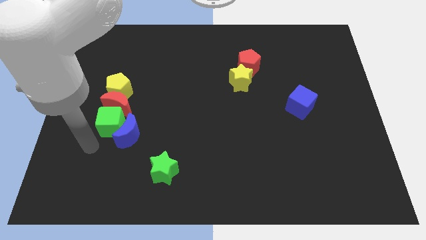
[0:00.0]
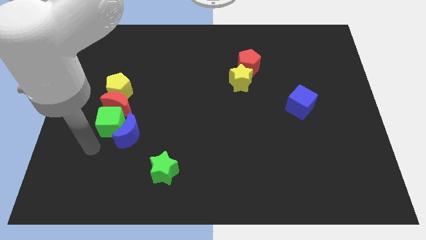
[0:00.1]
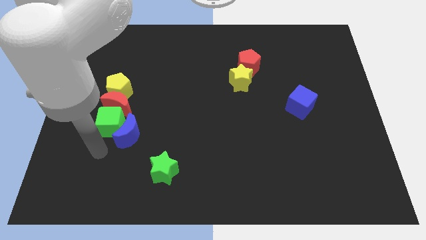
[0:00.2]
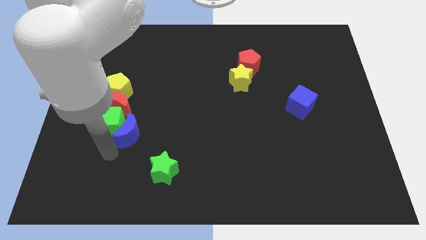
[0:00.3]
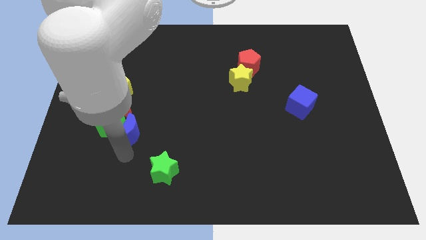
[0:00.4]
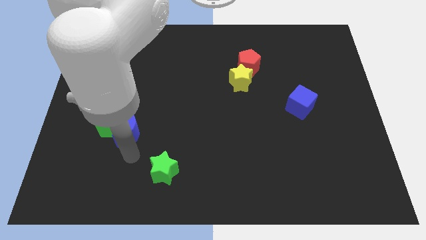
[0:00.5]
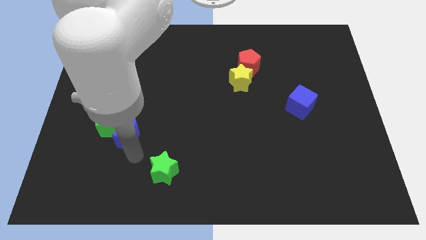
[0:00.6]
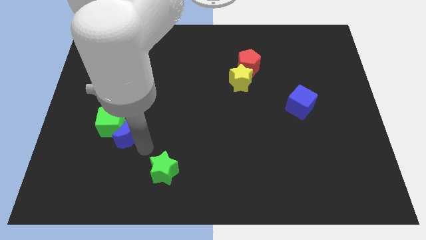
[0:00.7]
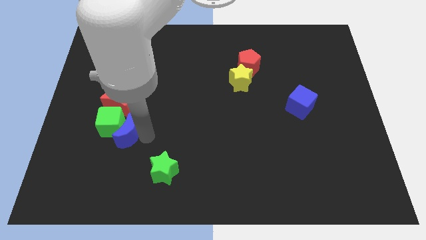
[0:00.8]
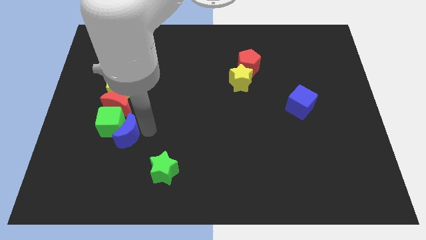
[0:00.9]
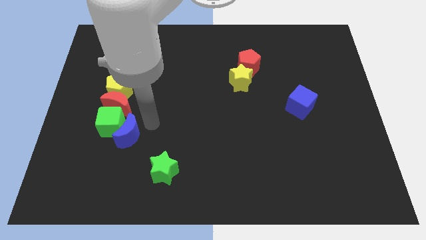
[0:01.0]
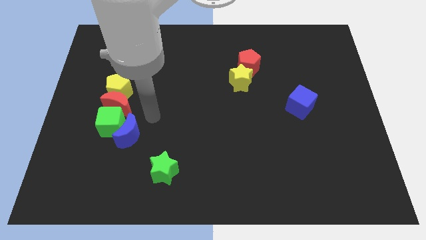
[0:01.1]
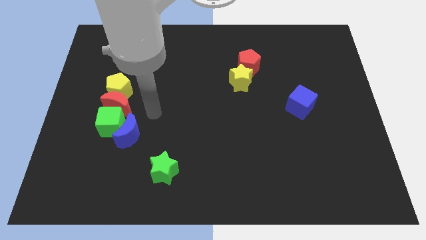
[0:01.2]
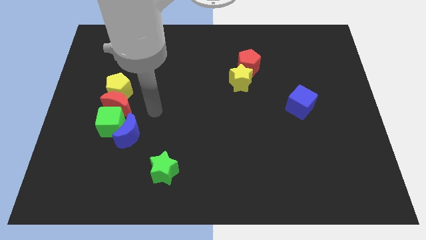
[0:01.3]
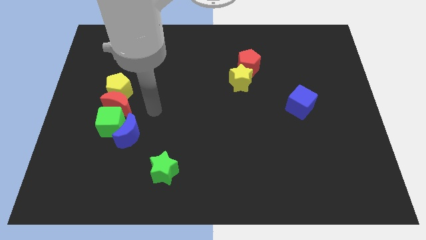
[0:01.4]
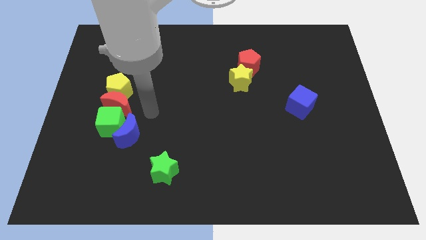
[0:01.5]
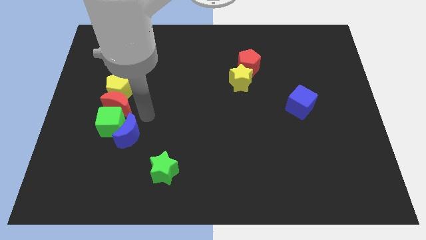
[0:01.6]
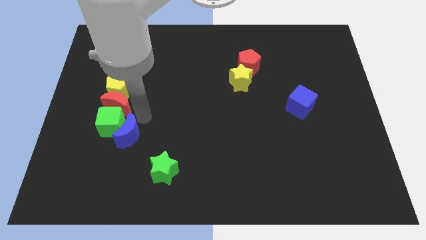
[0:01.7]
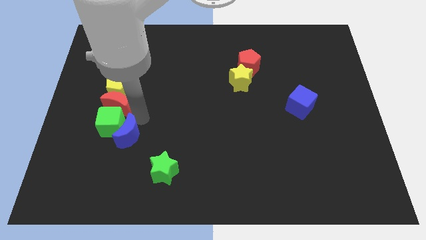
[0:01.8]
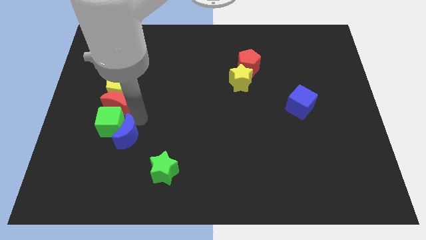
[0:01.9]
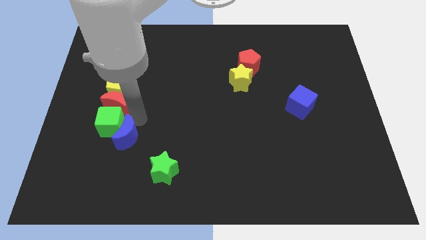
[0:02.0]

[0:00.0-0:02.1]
touch the blue crescent

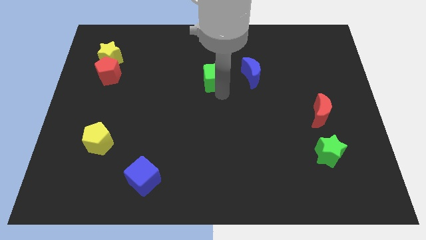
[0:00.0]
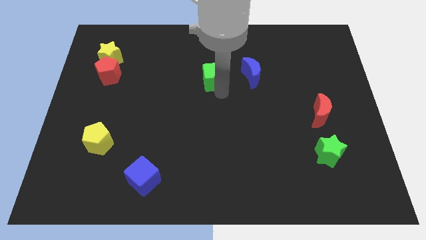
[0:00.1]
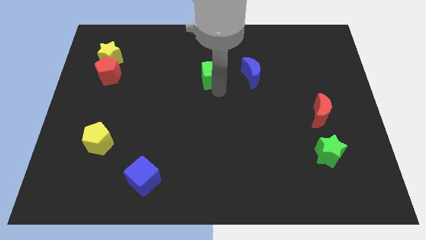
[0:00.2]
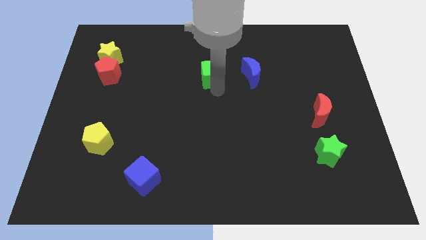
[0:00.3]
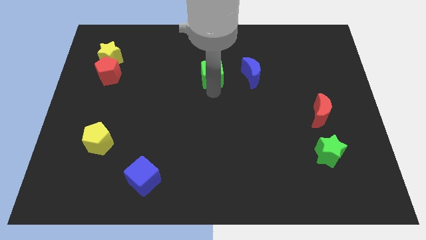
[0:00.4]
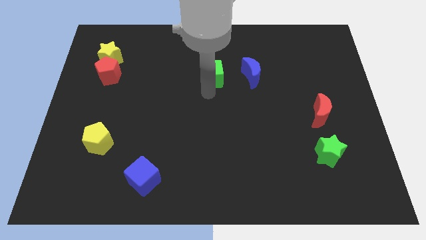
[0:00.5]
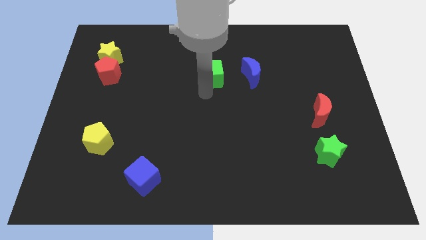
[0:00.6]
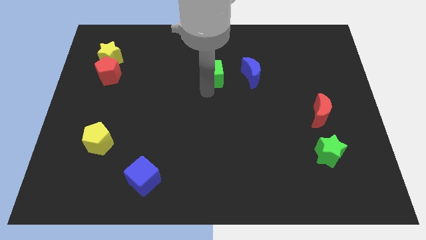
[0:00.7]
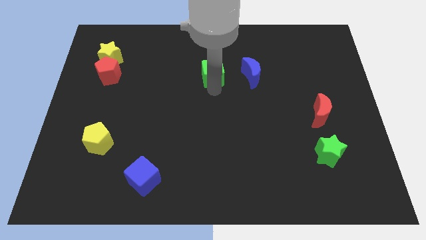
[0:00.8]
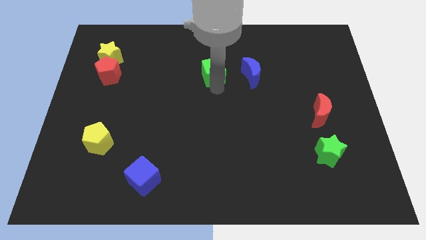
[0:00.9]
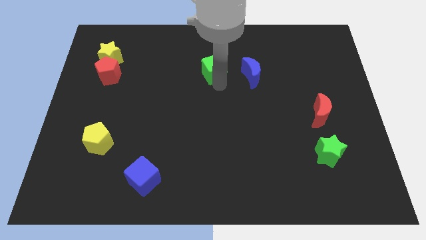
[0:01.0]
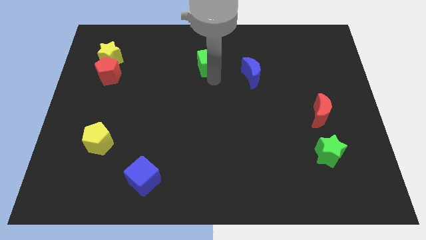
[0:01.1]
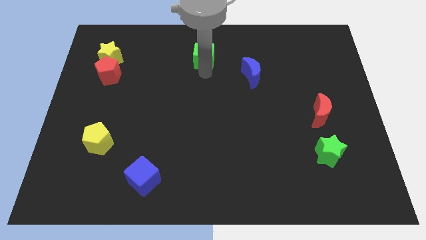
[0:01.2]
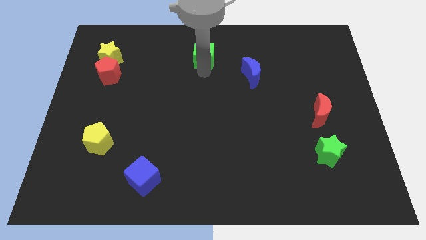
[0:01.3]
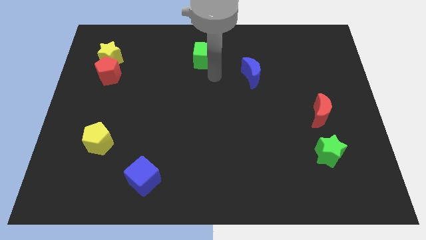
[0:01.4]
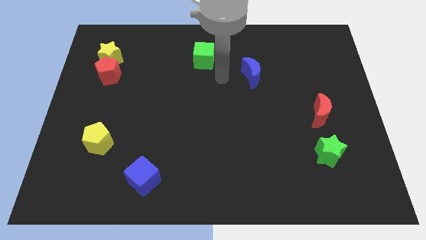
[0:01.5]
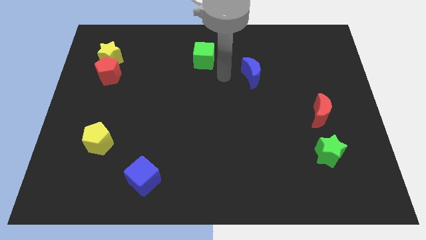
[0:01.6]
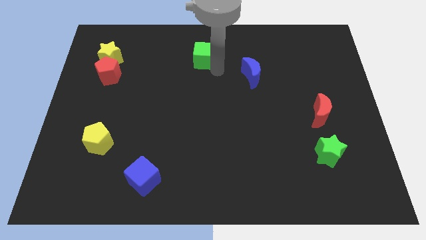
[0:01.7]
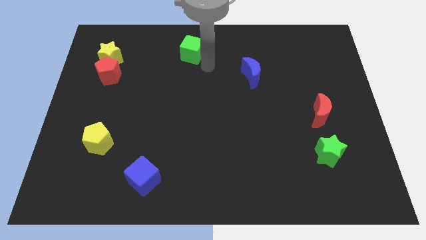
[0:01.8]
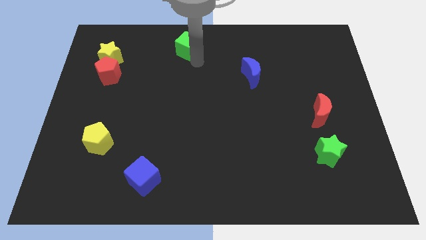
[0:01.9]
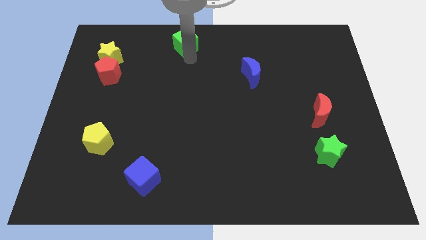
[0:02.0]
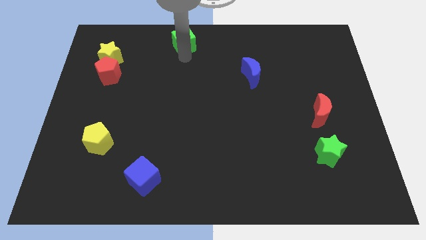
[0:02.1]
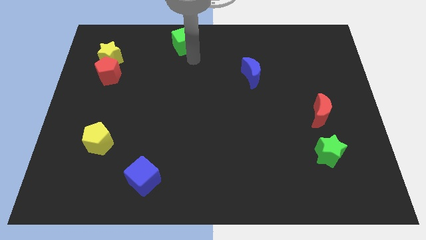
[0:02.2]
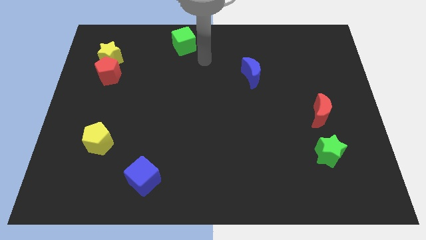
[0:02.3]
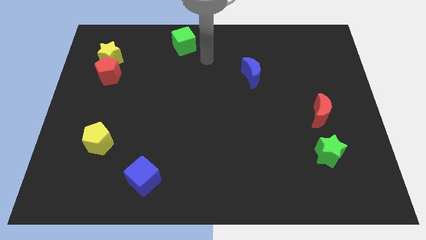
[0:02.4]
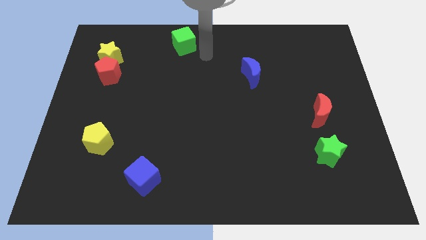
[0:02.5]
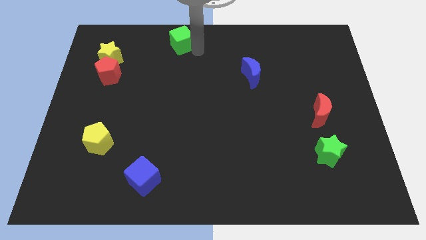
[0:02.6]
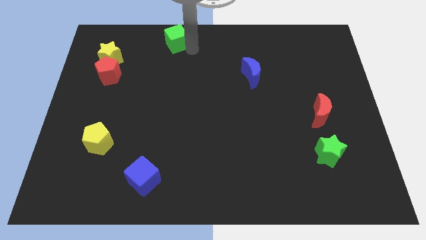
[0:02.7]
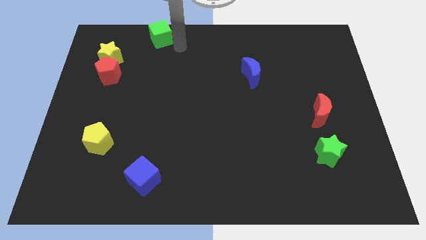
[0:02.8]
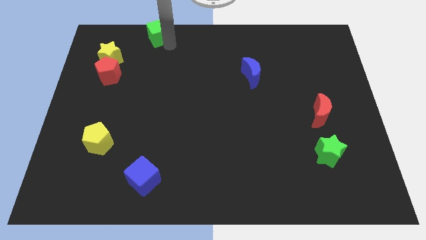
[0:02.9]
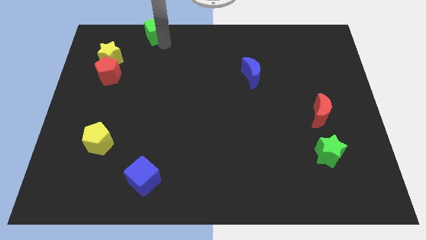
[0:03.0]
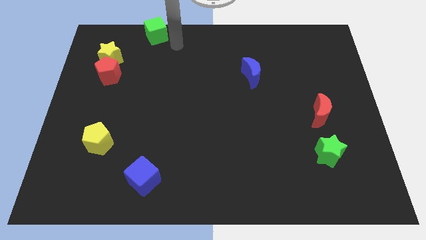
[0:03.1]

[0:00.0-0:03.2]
place green cube diagonally above yellow star

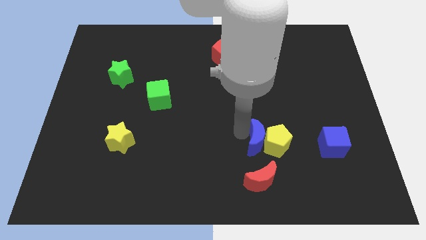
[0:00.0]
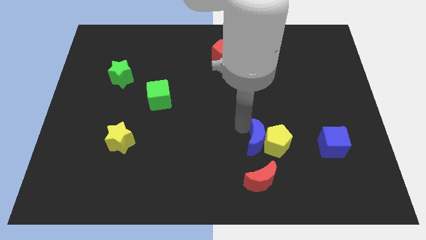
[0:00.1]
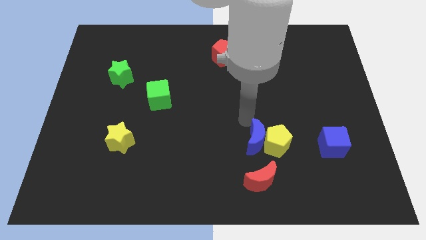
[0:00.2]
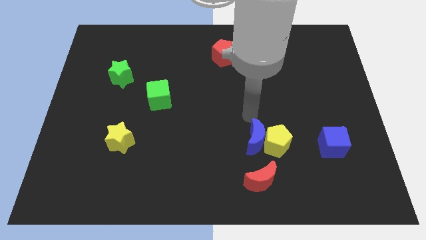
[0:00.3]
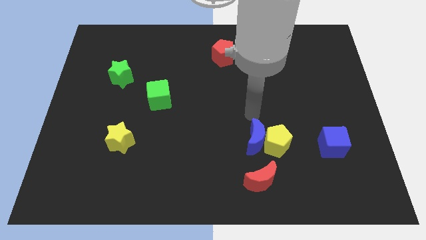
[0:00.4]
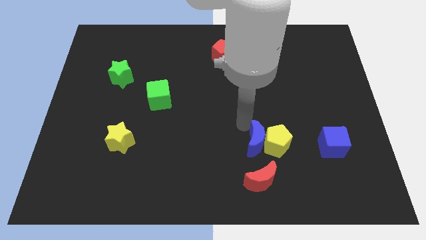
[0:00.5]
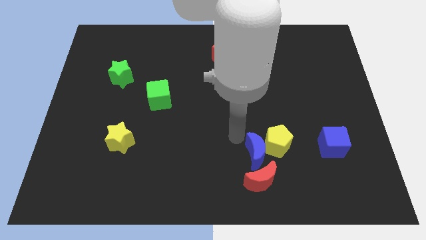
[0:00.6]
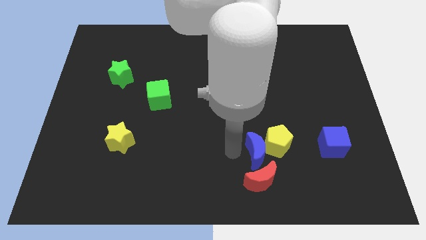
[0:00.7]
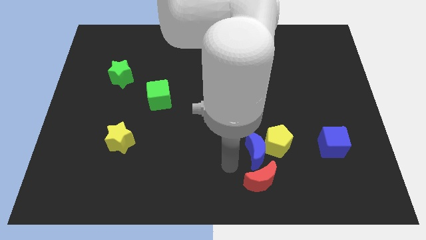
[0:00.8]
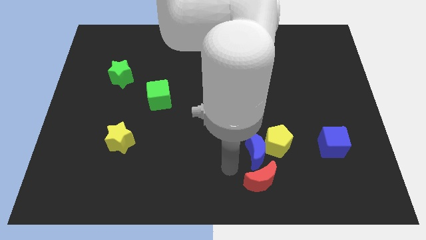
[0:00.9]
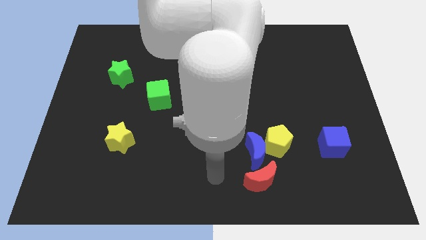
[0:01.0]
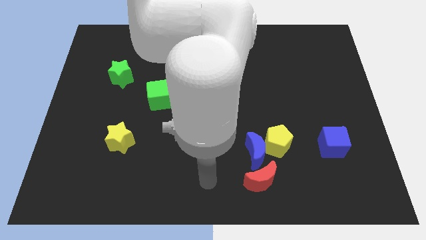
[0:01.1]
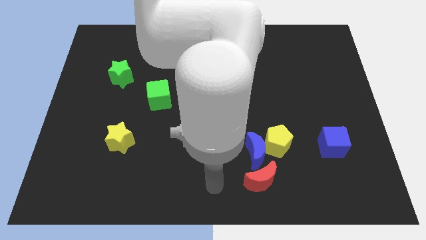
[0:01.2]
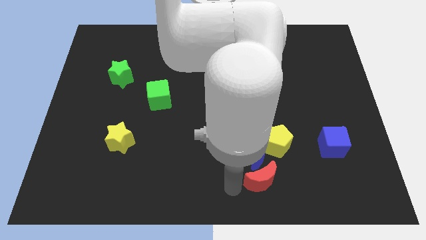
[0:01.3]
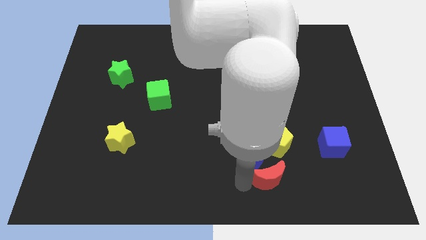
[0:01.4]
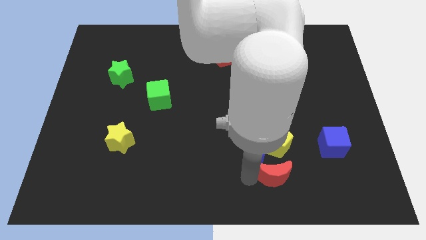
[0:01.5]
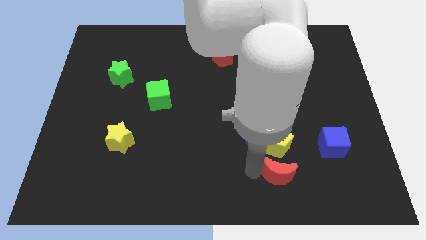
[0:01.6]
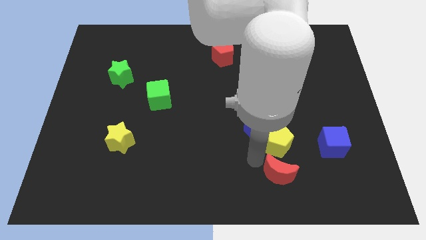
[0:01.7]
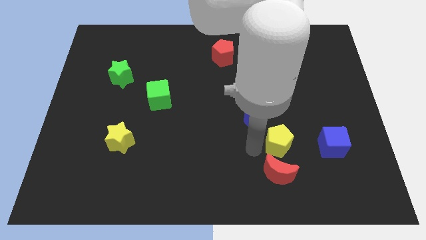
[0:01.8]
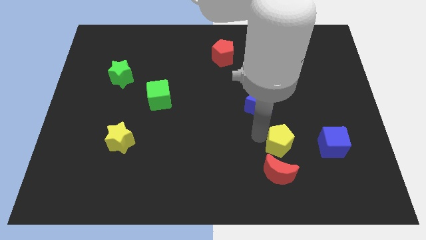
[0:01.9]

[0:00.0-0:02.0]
separate blue crescent from yellow pentagon

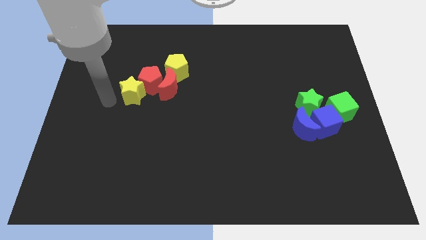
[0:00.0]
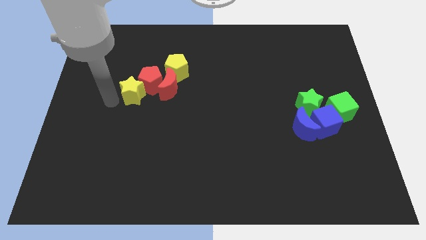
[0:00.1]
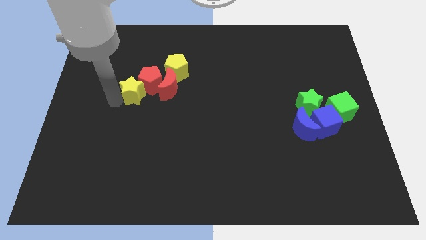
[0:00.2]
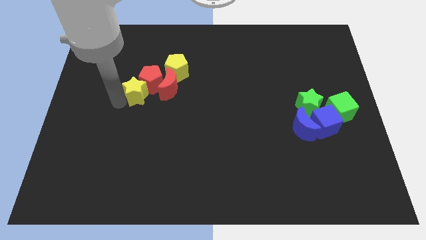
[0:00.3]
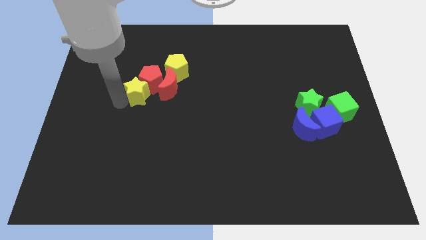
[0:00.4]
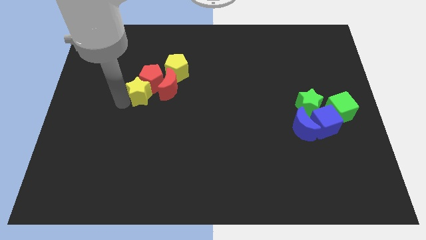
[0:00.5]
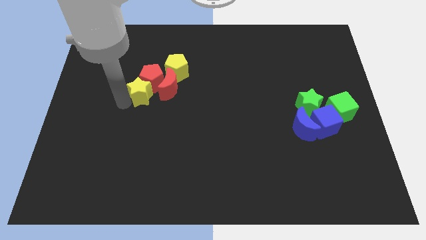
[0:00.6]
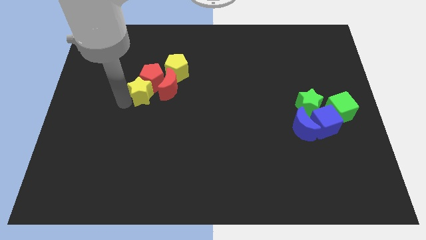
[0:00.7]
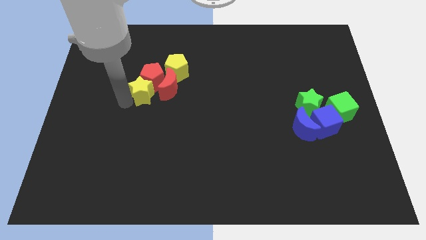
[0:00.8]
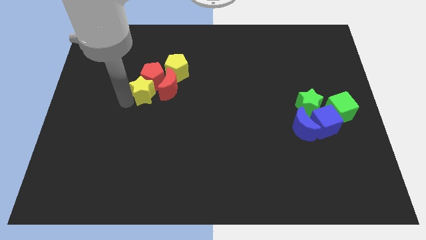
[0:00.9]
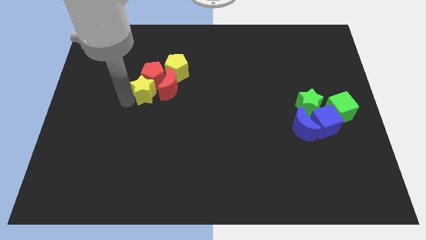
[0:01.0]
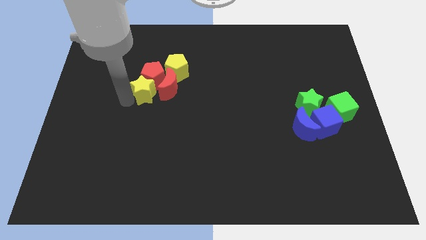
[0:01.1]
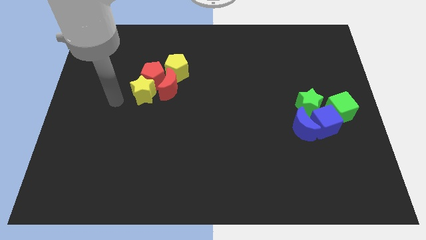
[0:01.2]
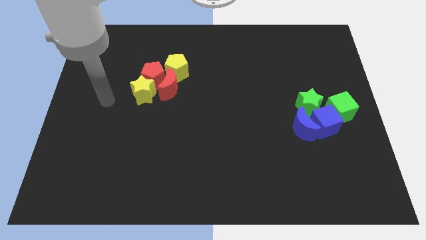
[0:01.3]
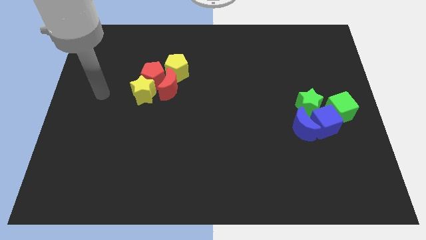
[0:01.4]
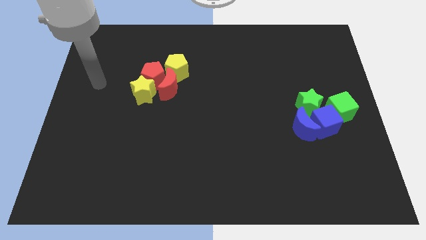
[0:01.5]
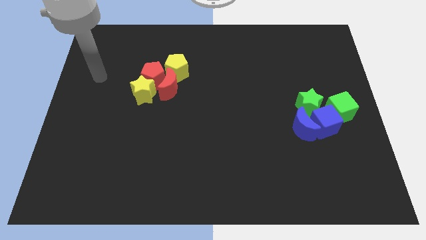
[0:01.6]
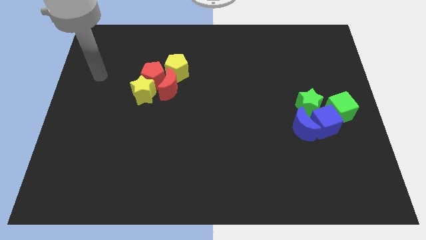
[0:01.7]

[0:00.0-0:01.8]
push the yellow star into the red pentagon
